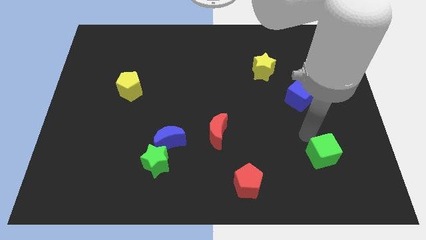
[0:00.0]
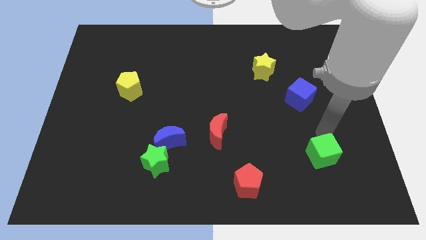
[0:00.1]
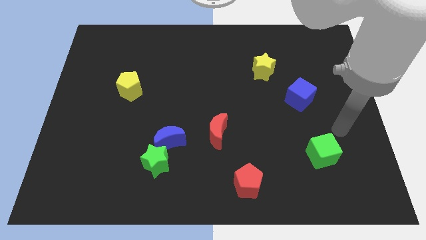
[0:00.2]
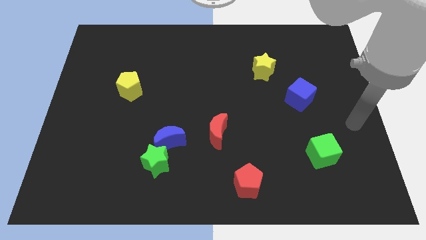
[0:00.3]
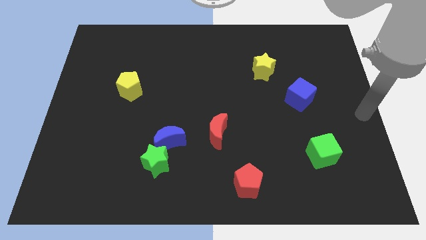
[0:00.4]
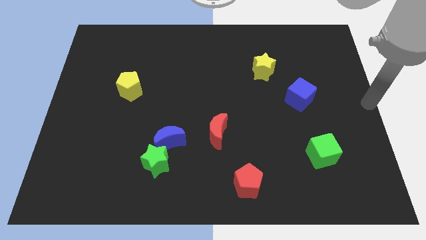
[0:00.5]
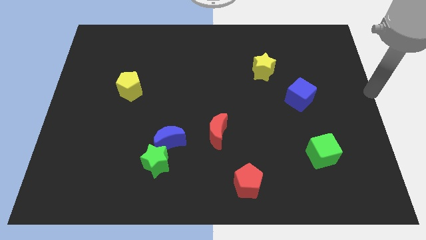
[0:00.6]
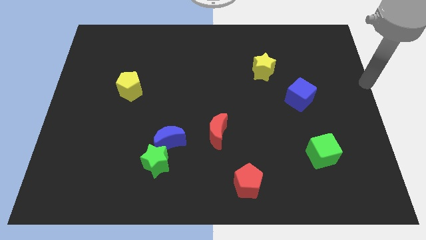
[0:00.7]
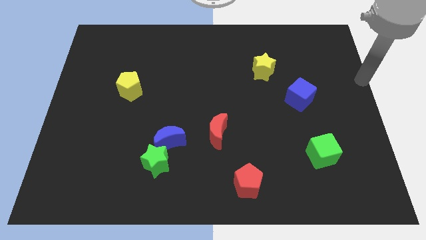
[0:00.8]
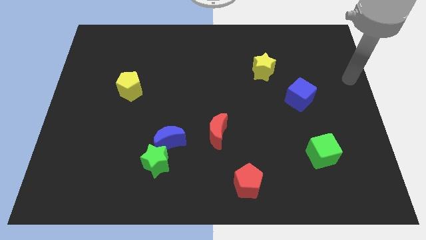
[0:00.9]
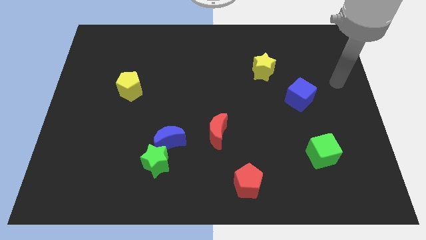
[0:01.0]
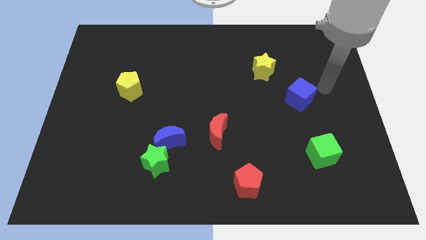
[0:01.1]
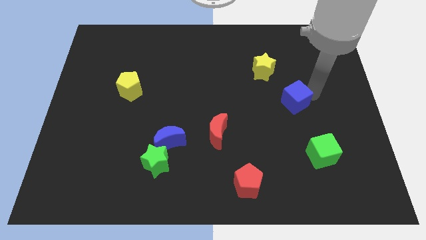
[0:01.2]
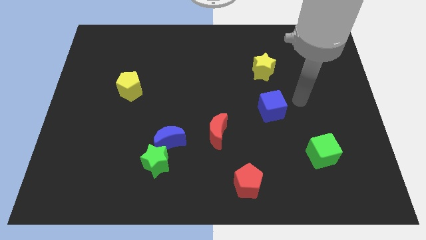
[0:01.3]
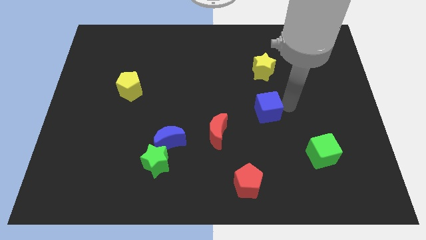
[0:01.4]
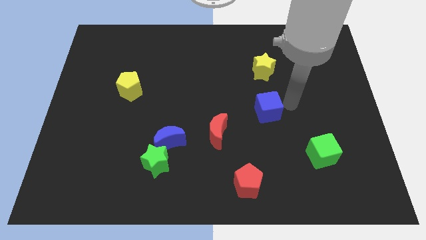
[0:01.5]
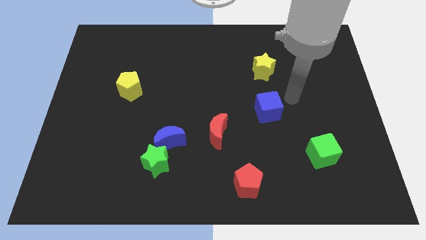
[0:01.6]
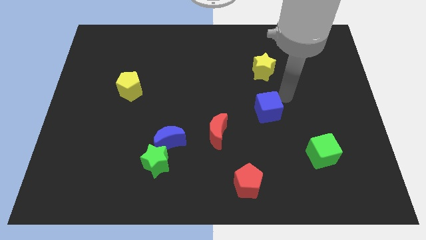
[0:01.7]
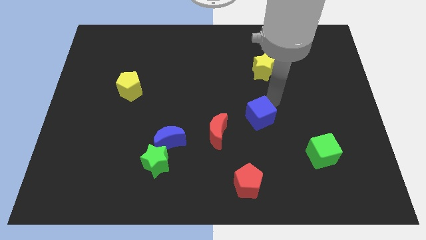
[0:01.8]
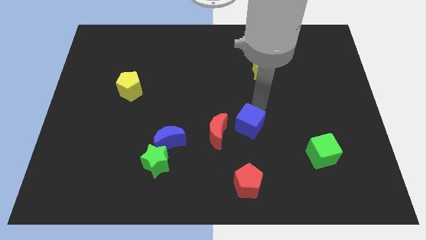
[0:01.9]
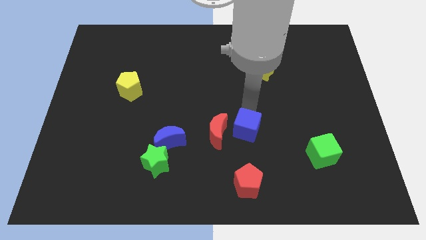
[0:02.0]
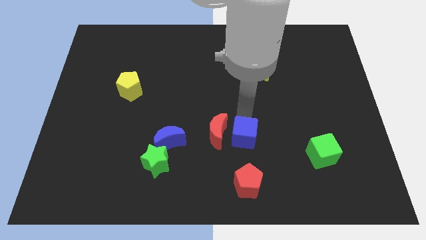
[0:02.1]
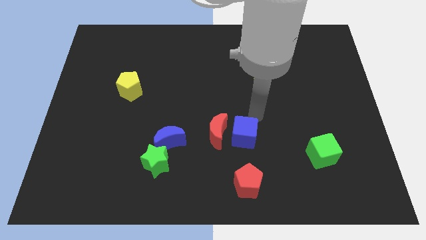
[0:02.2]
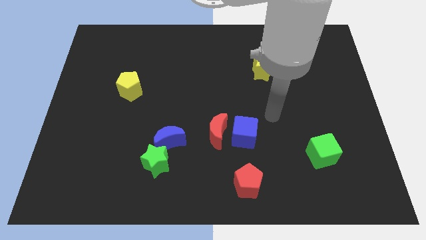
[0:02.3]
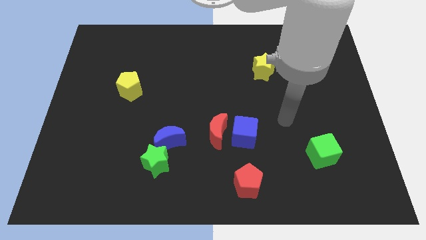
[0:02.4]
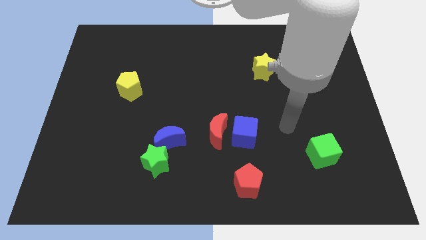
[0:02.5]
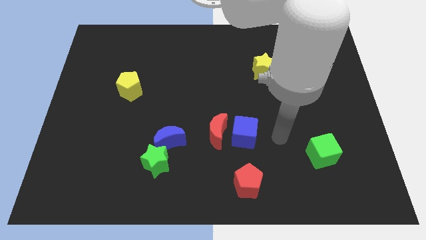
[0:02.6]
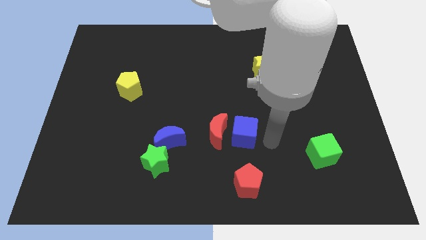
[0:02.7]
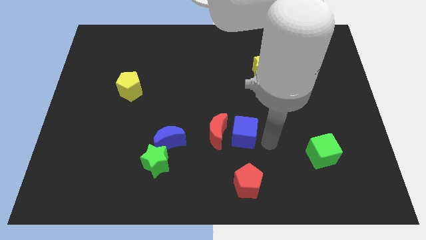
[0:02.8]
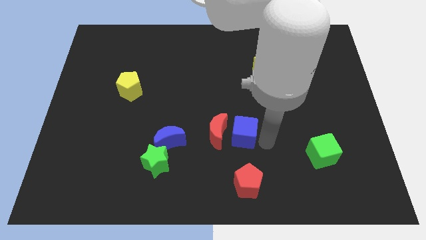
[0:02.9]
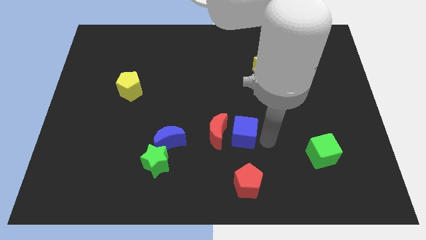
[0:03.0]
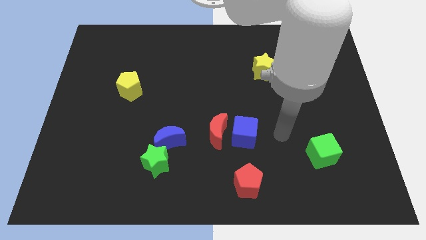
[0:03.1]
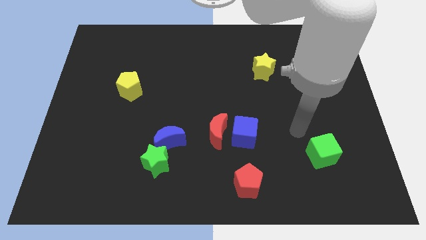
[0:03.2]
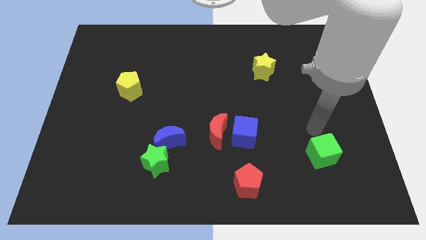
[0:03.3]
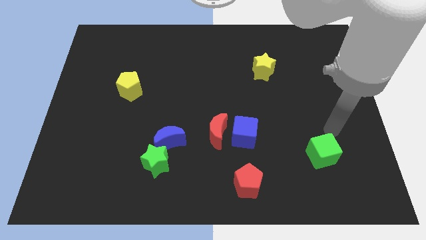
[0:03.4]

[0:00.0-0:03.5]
slide the blue cube to the right side of the red crescent

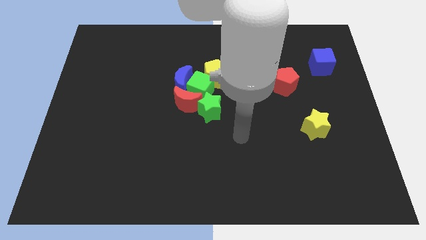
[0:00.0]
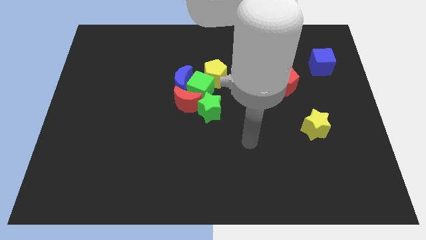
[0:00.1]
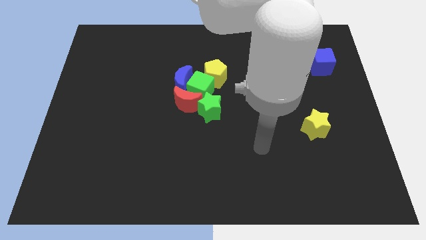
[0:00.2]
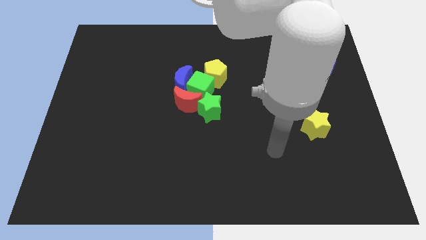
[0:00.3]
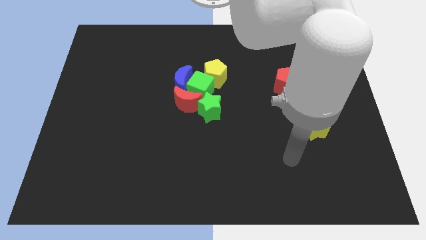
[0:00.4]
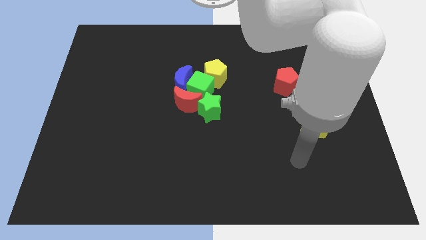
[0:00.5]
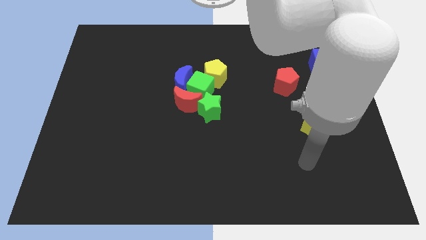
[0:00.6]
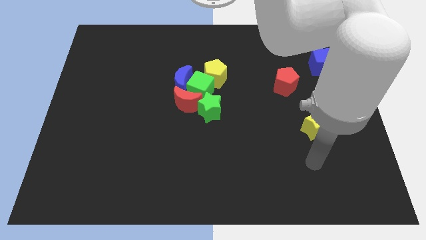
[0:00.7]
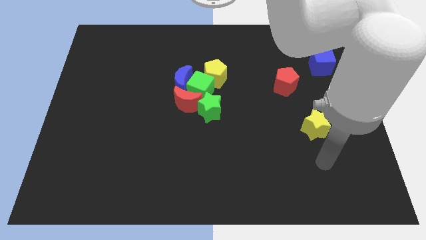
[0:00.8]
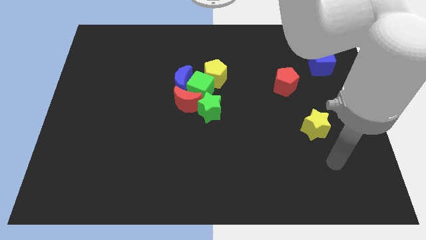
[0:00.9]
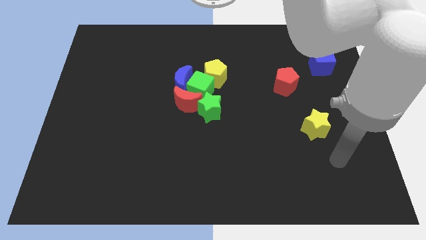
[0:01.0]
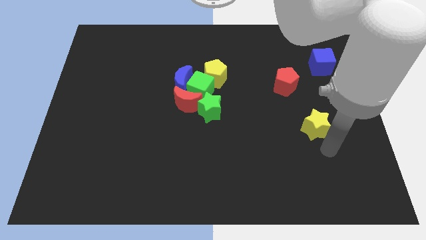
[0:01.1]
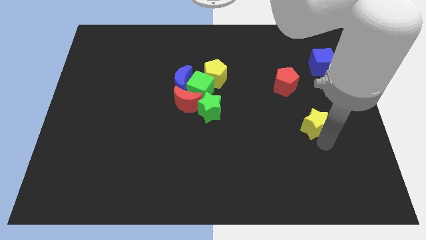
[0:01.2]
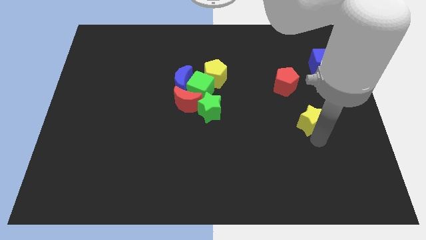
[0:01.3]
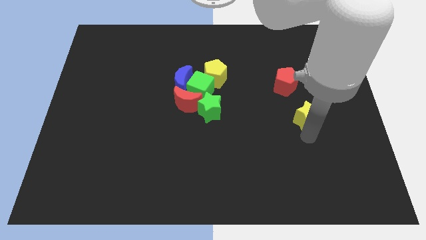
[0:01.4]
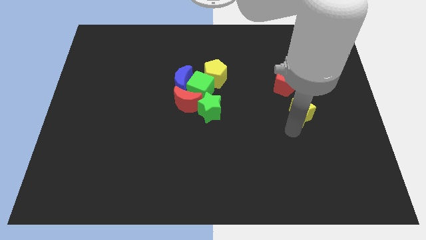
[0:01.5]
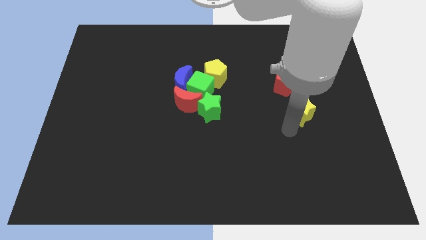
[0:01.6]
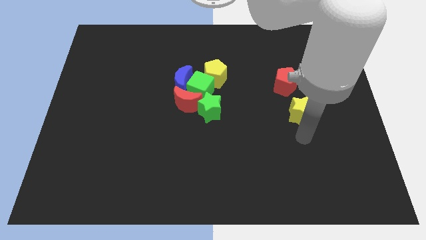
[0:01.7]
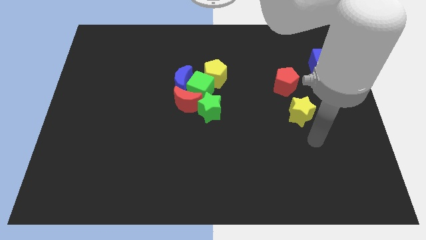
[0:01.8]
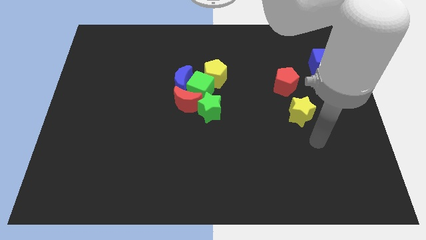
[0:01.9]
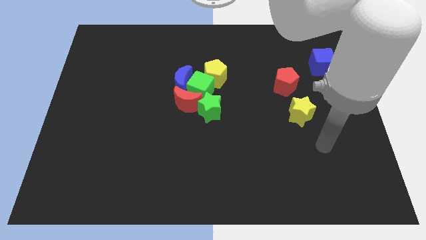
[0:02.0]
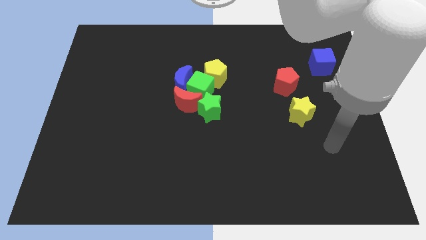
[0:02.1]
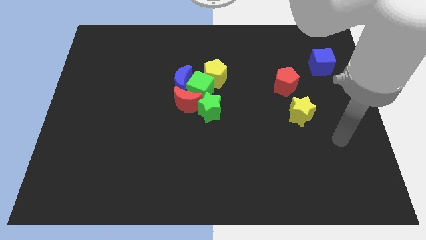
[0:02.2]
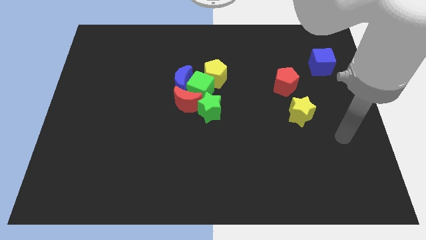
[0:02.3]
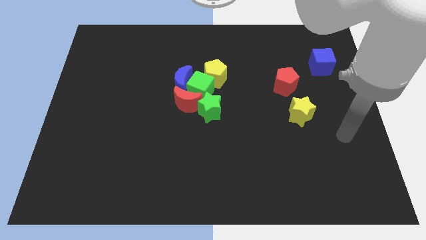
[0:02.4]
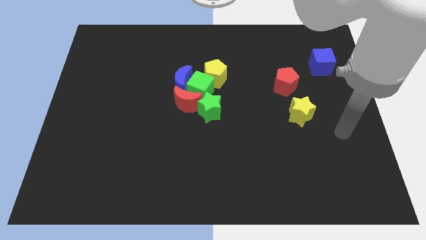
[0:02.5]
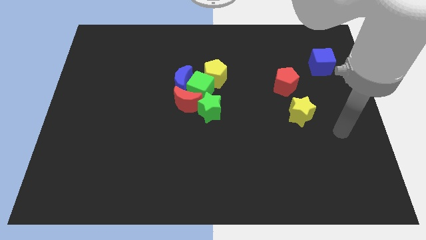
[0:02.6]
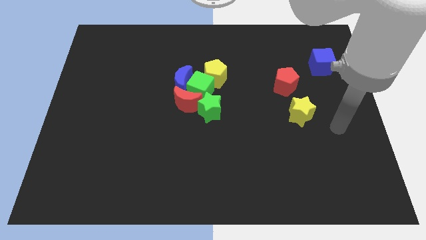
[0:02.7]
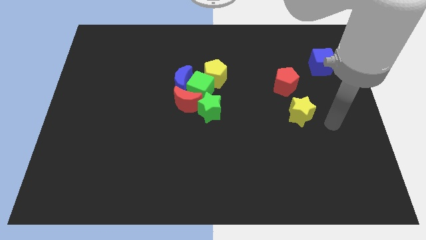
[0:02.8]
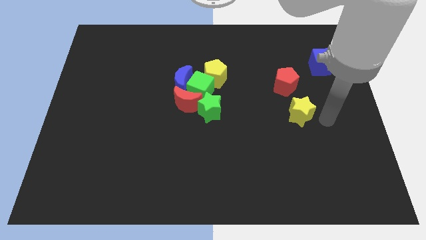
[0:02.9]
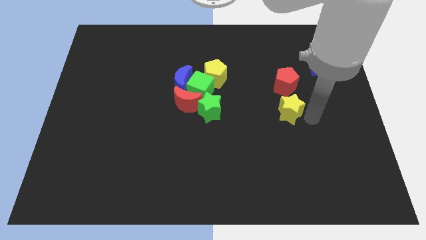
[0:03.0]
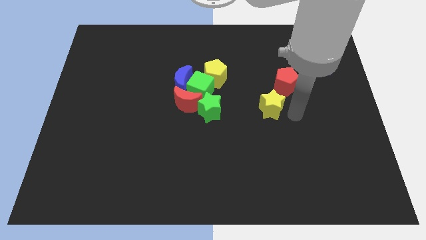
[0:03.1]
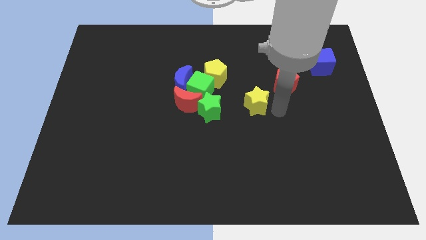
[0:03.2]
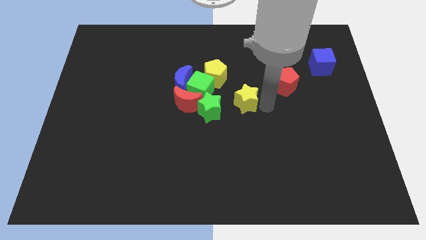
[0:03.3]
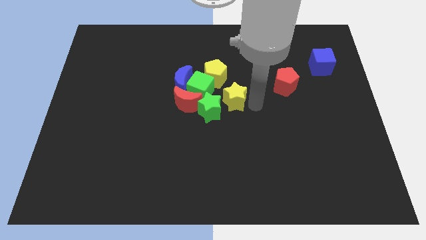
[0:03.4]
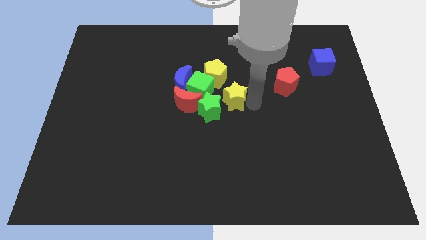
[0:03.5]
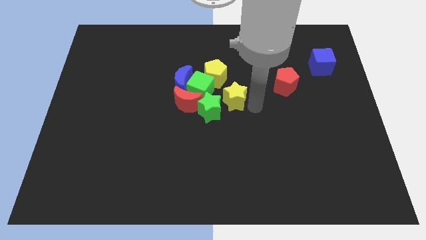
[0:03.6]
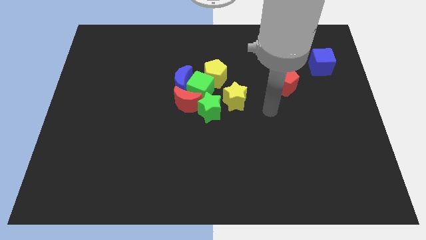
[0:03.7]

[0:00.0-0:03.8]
push the yellow star diagonally to the top right of the green star

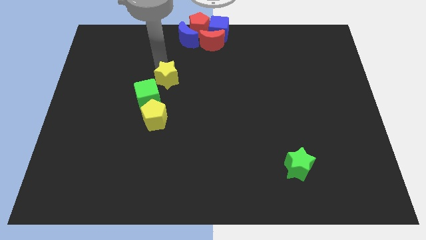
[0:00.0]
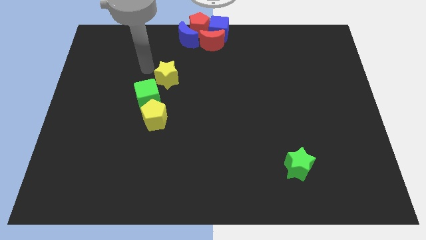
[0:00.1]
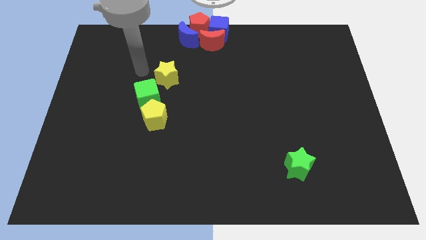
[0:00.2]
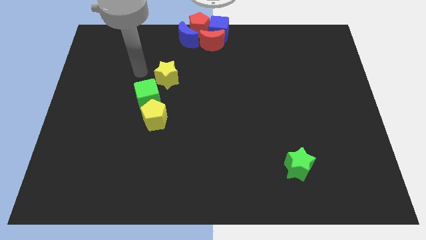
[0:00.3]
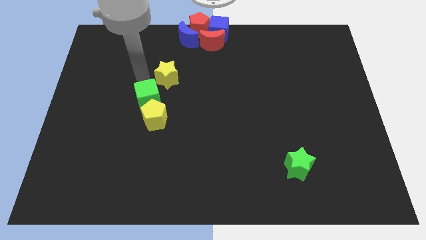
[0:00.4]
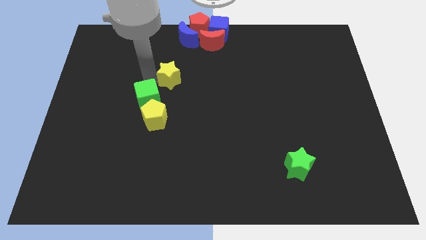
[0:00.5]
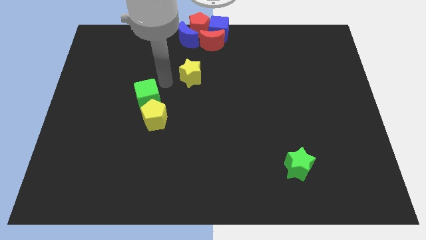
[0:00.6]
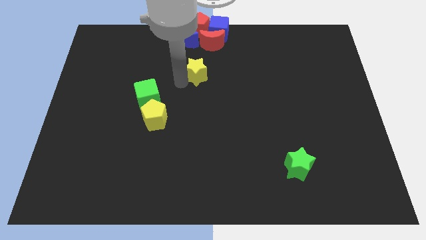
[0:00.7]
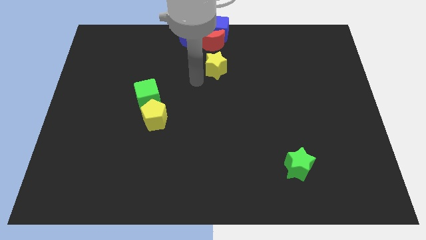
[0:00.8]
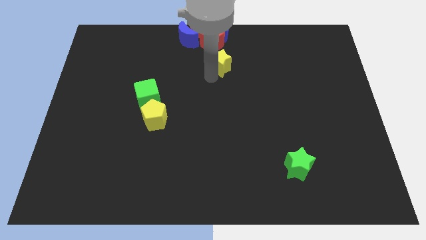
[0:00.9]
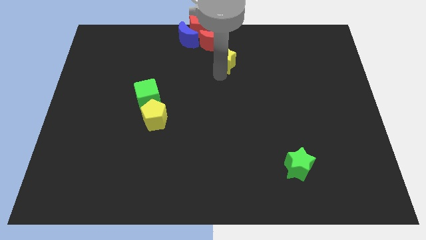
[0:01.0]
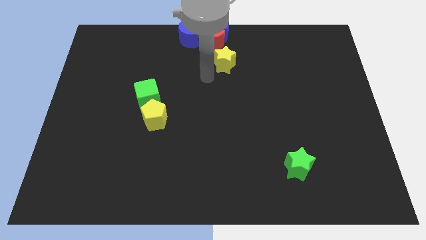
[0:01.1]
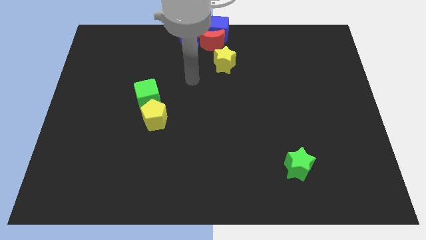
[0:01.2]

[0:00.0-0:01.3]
place the yellow star down to the red moon

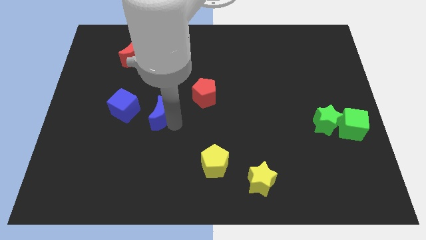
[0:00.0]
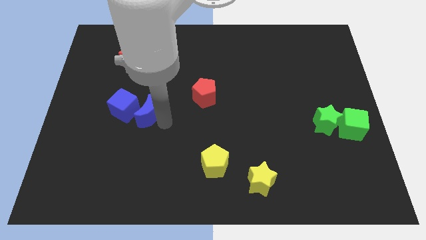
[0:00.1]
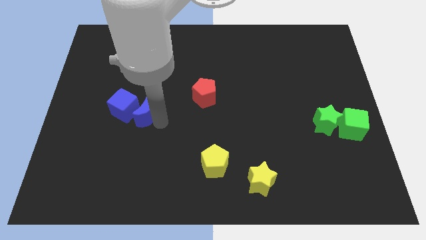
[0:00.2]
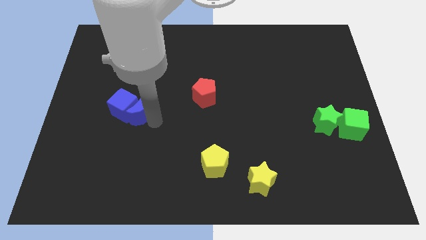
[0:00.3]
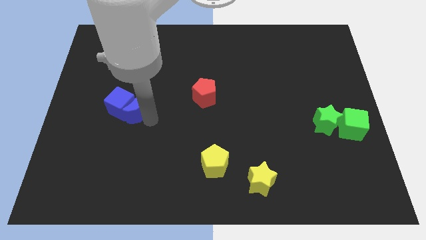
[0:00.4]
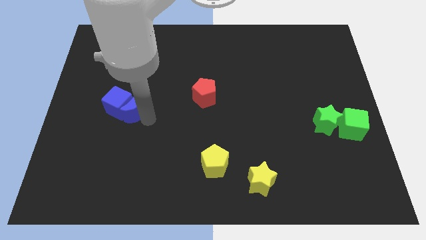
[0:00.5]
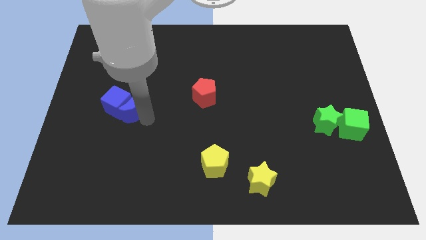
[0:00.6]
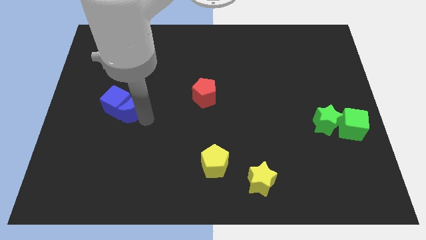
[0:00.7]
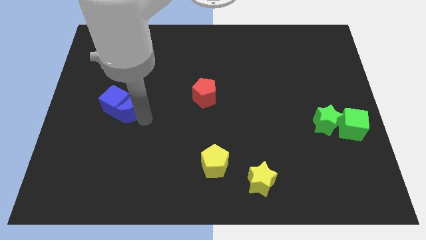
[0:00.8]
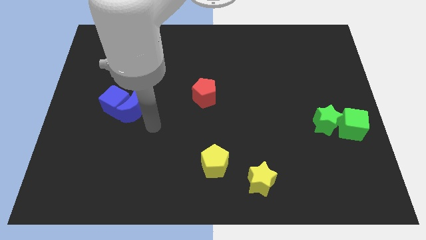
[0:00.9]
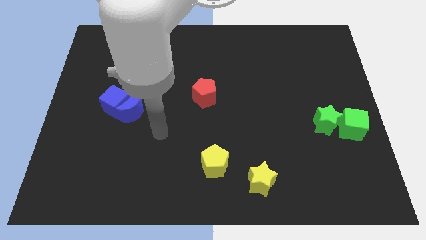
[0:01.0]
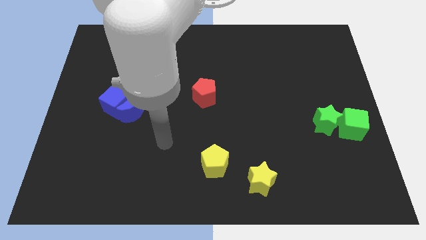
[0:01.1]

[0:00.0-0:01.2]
push blue moon into the blue cube
